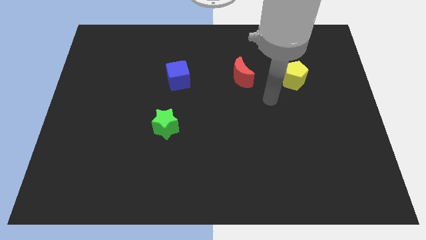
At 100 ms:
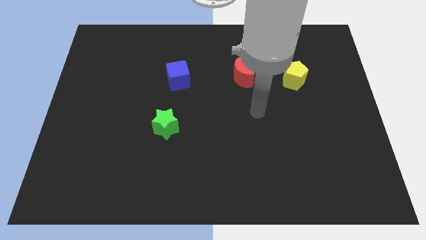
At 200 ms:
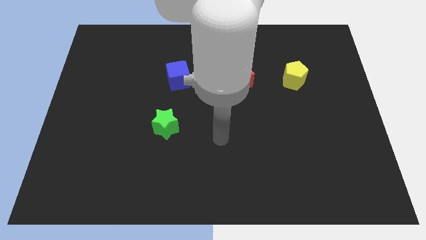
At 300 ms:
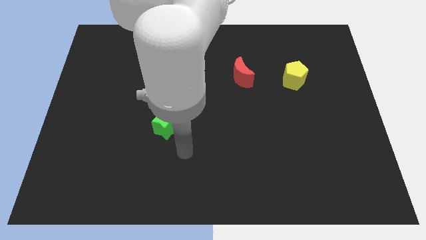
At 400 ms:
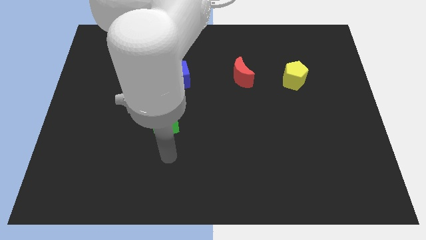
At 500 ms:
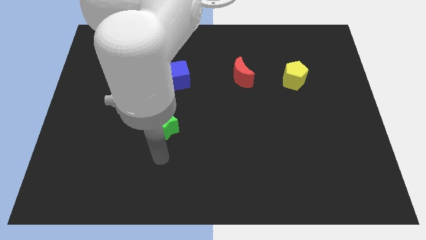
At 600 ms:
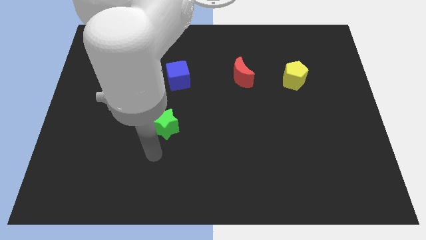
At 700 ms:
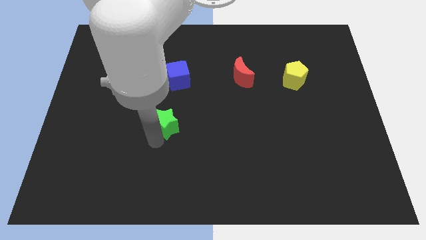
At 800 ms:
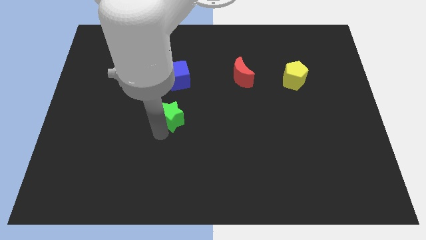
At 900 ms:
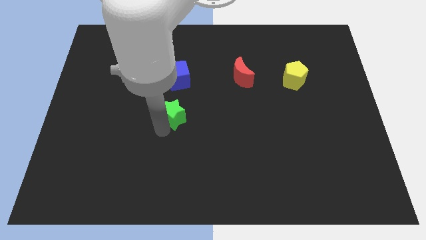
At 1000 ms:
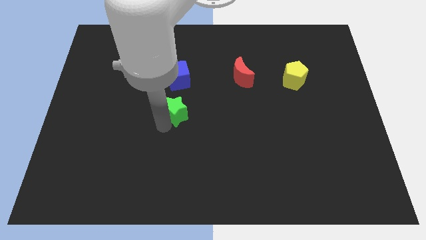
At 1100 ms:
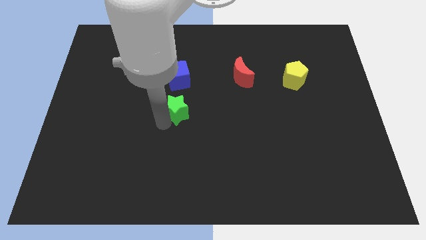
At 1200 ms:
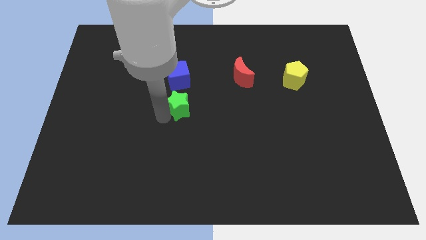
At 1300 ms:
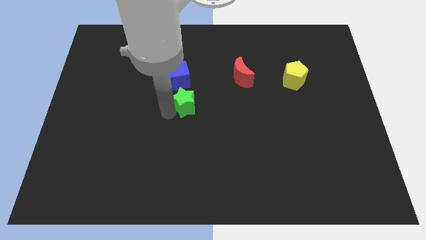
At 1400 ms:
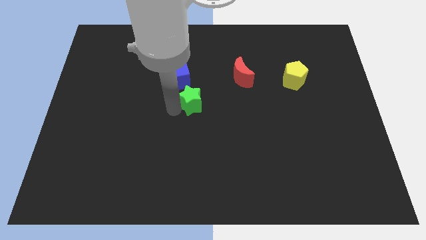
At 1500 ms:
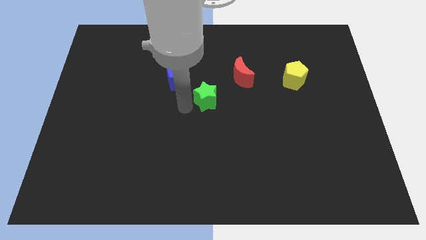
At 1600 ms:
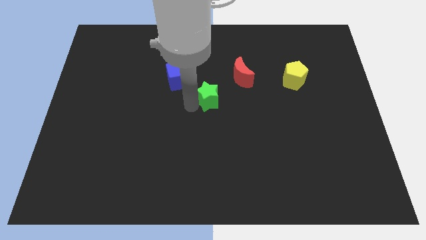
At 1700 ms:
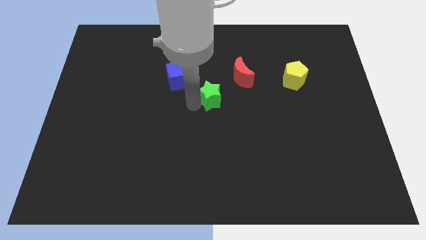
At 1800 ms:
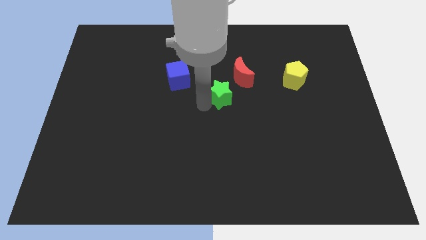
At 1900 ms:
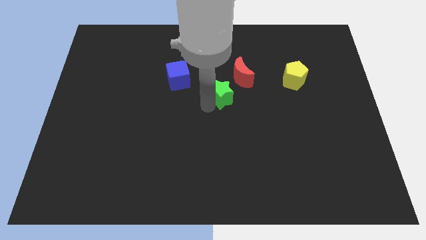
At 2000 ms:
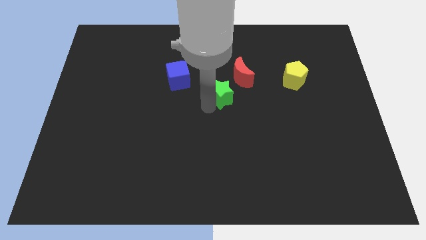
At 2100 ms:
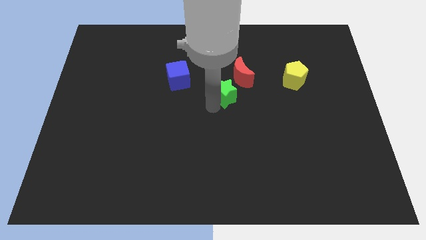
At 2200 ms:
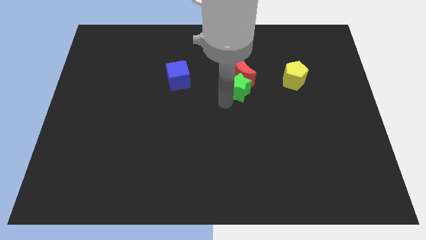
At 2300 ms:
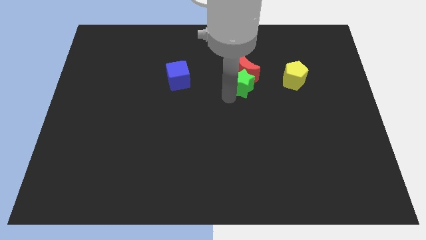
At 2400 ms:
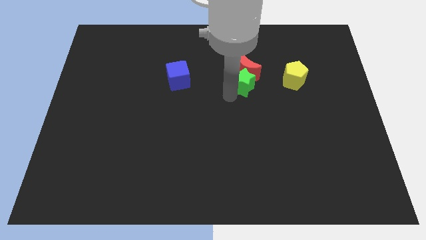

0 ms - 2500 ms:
put the green block close to the moon

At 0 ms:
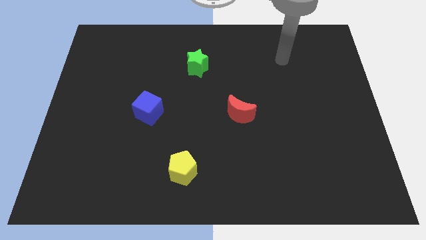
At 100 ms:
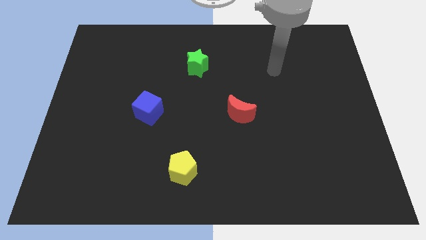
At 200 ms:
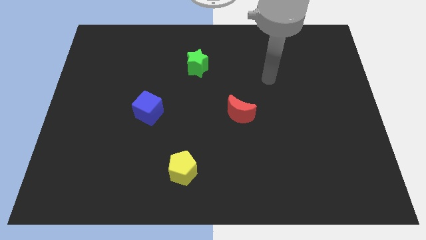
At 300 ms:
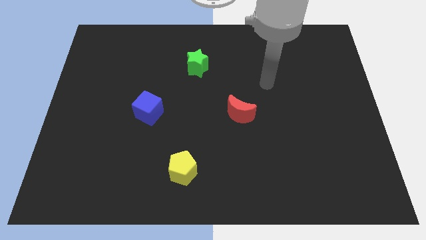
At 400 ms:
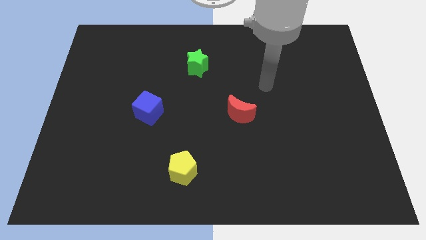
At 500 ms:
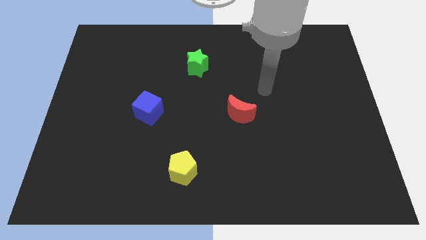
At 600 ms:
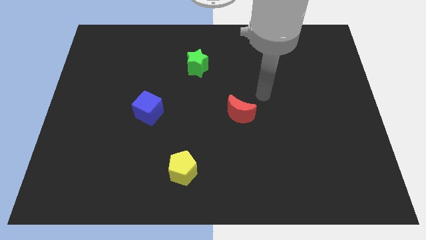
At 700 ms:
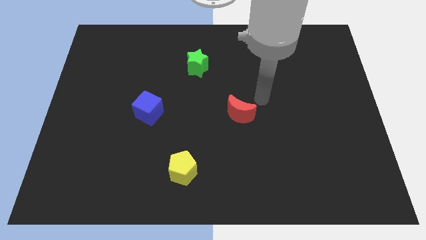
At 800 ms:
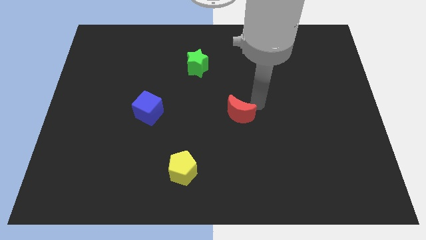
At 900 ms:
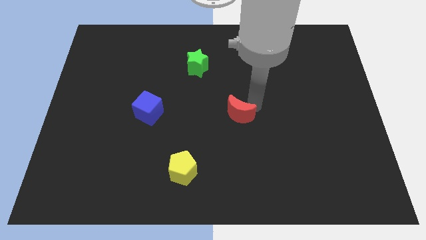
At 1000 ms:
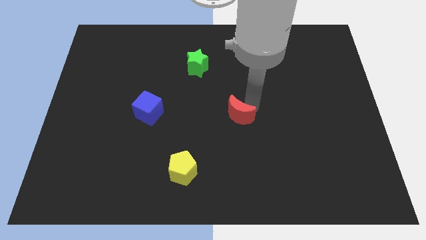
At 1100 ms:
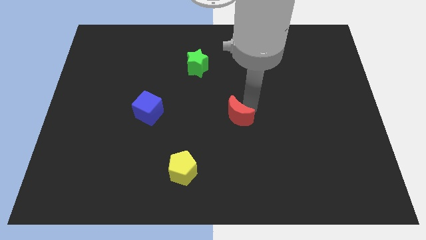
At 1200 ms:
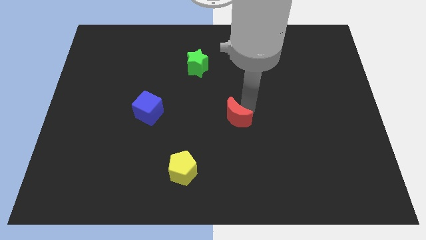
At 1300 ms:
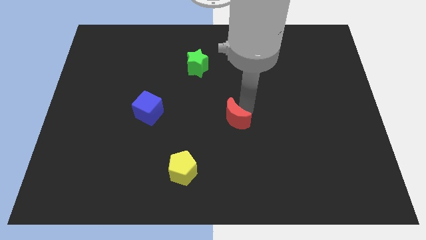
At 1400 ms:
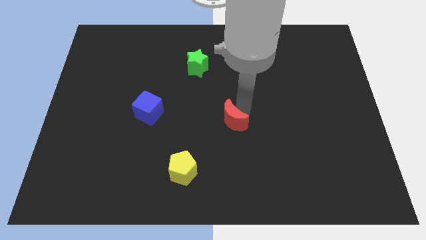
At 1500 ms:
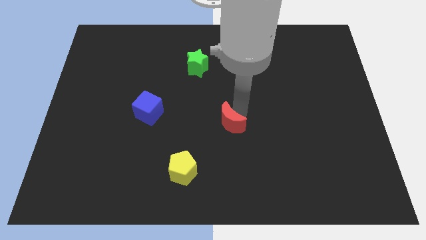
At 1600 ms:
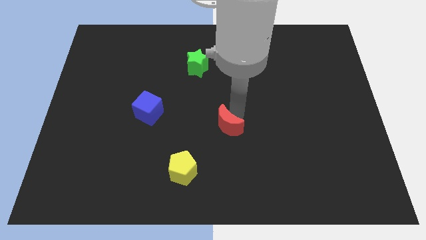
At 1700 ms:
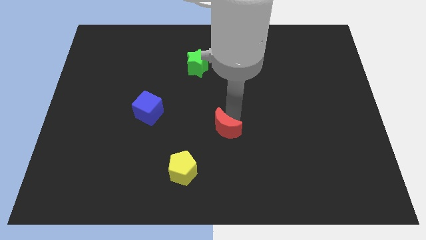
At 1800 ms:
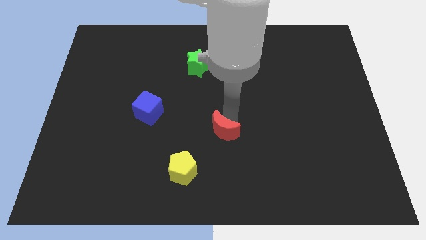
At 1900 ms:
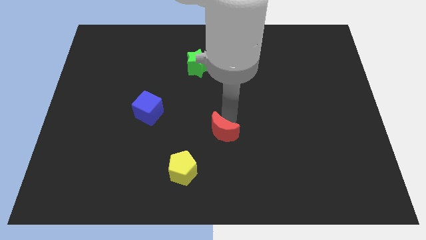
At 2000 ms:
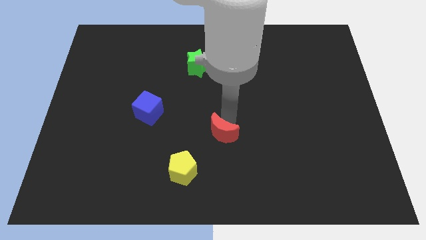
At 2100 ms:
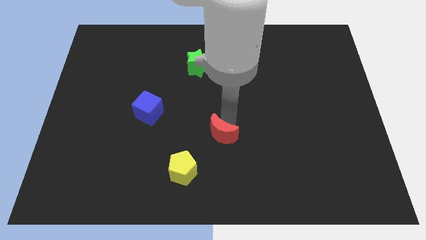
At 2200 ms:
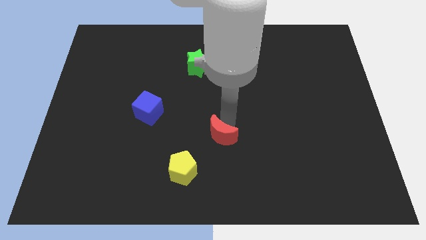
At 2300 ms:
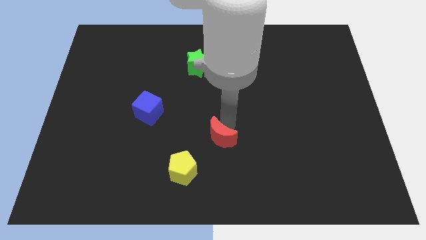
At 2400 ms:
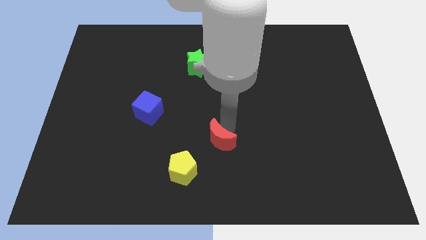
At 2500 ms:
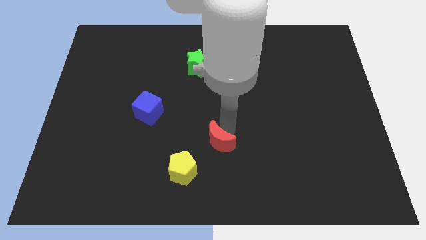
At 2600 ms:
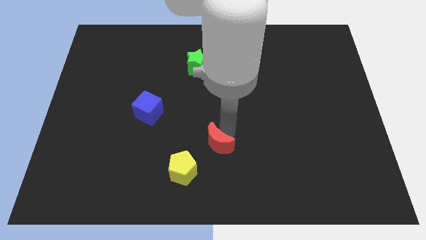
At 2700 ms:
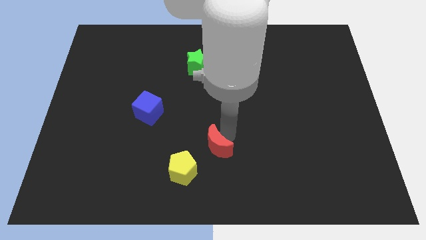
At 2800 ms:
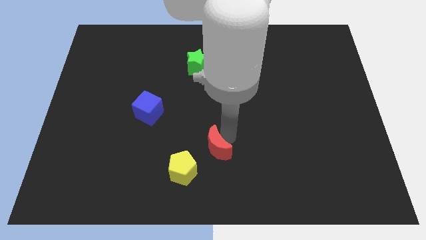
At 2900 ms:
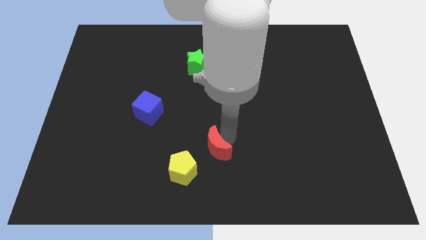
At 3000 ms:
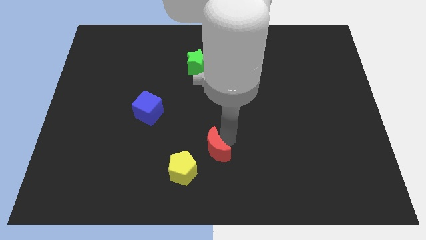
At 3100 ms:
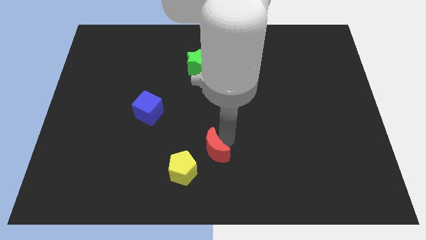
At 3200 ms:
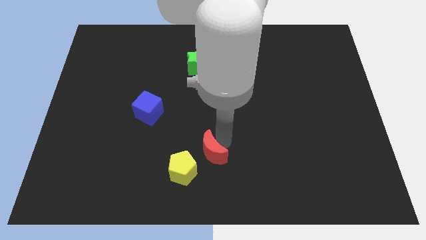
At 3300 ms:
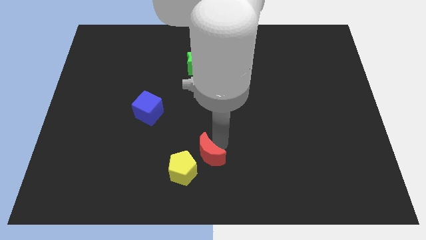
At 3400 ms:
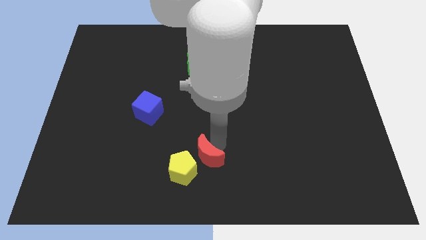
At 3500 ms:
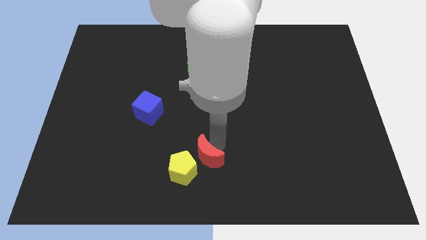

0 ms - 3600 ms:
slide the moon to the yellow block

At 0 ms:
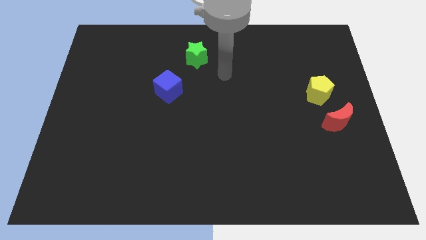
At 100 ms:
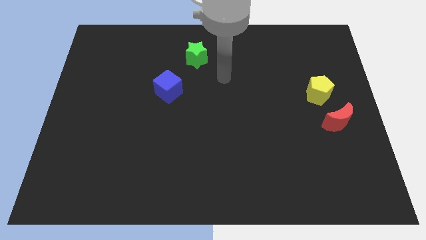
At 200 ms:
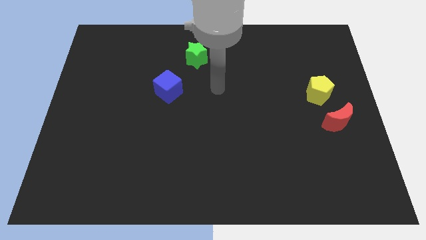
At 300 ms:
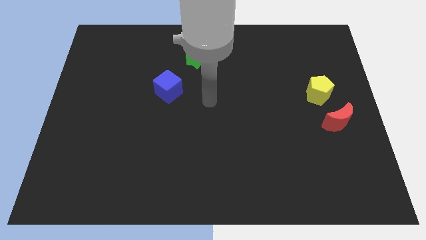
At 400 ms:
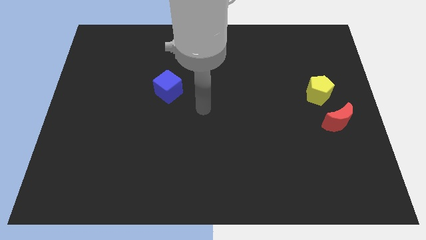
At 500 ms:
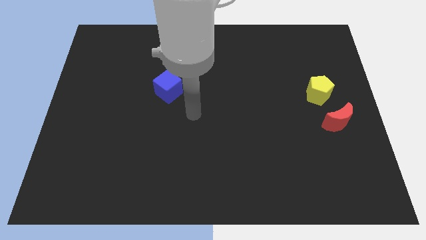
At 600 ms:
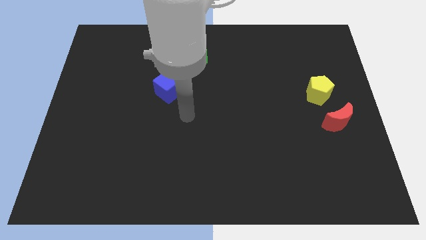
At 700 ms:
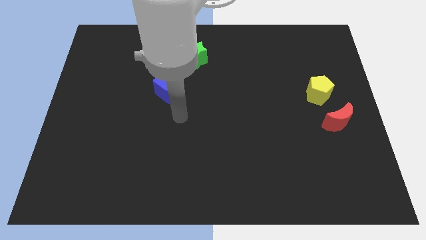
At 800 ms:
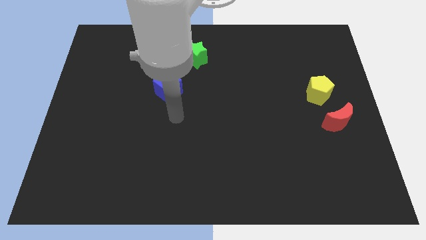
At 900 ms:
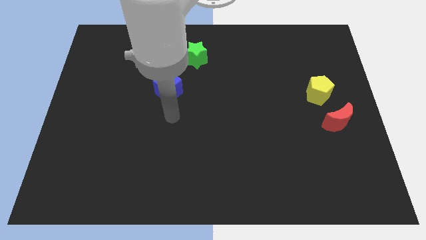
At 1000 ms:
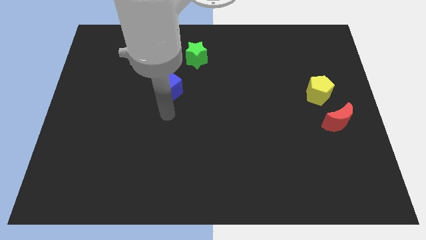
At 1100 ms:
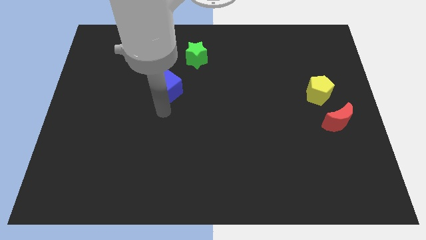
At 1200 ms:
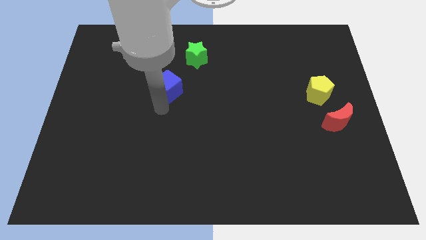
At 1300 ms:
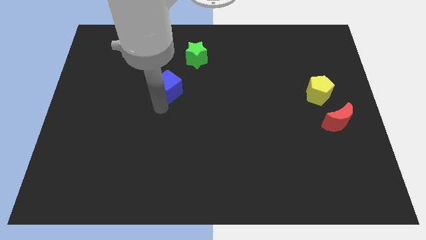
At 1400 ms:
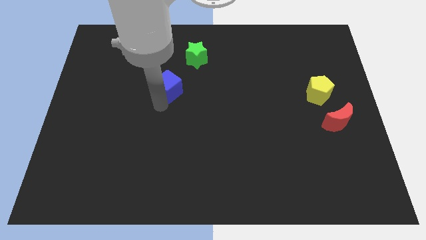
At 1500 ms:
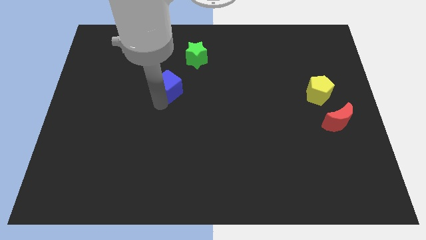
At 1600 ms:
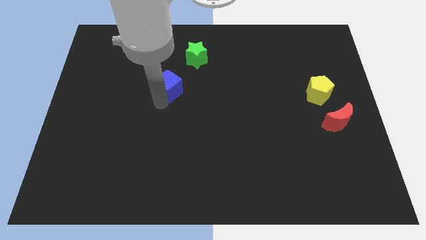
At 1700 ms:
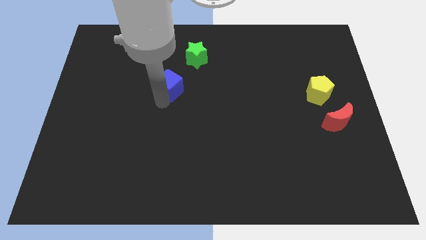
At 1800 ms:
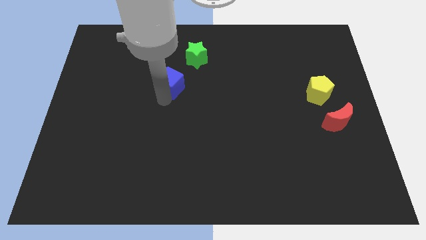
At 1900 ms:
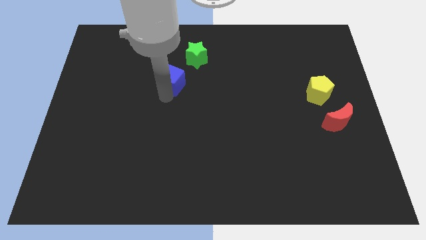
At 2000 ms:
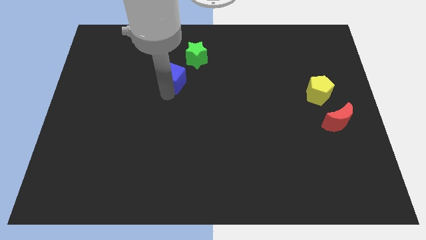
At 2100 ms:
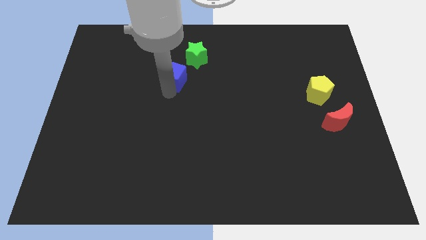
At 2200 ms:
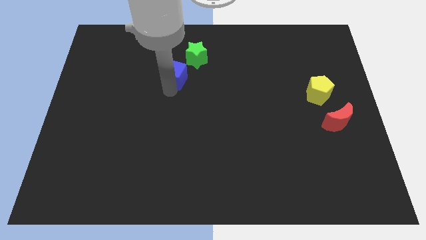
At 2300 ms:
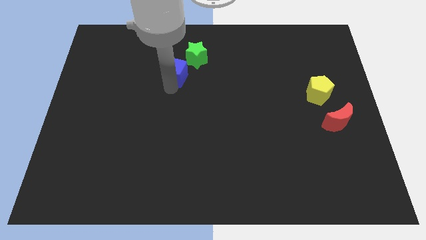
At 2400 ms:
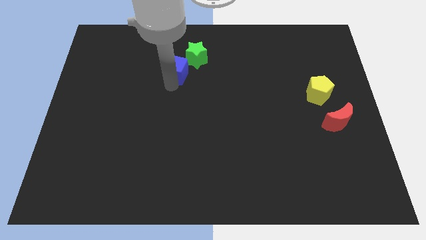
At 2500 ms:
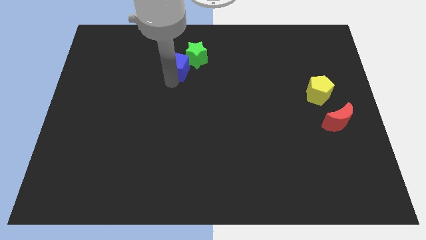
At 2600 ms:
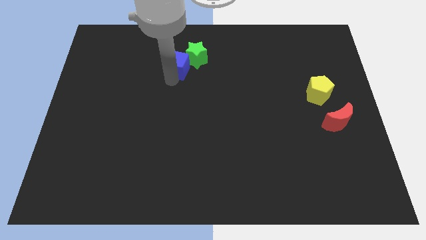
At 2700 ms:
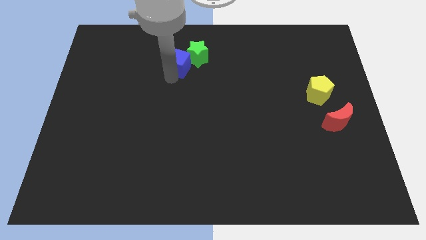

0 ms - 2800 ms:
put the cube next to the green block
